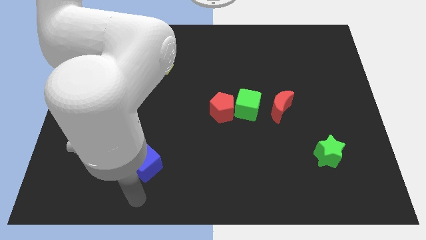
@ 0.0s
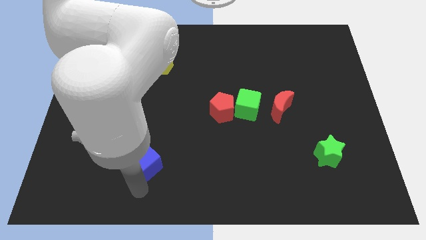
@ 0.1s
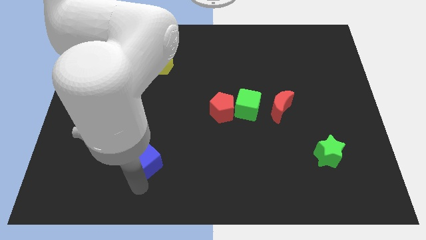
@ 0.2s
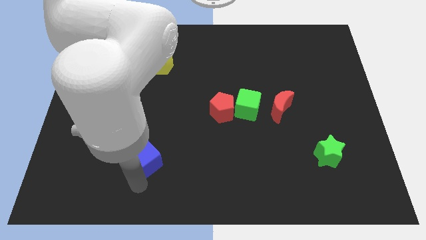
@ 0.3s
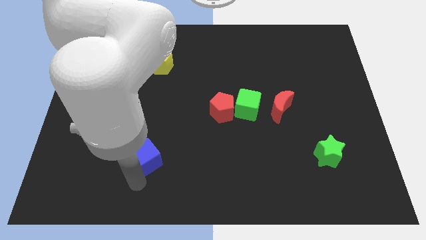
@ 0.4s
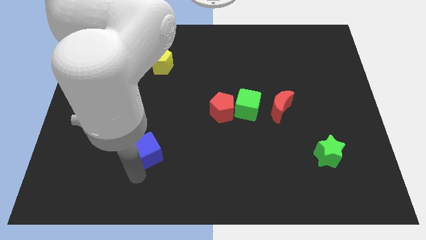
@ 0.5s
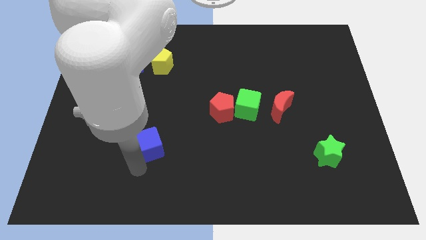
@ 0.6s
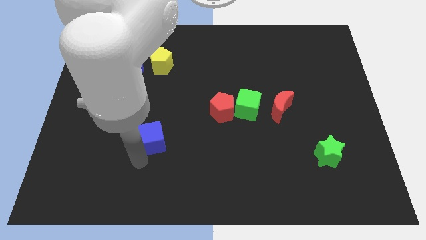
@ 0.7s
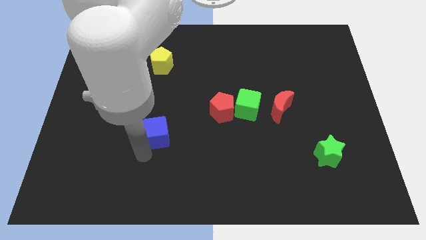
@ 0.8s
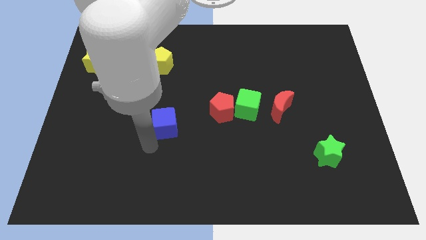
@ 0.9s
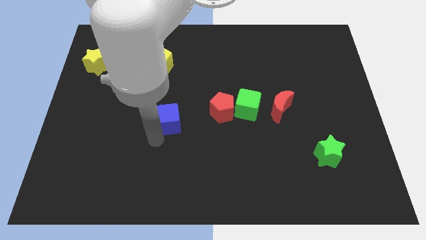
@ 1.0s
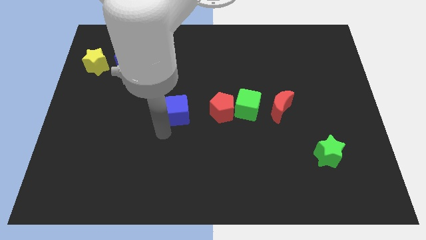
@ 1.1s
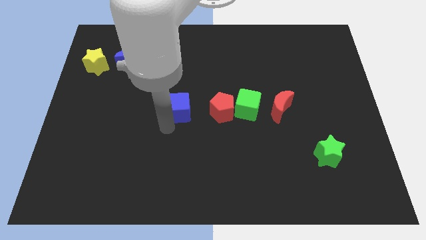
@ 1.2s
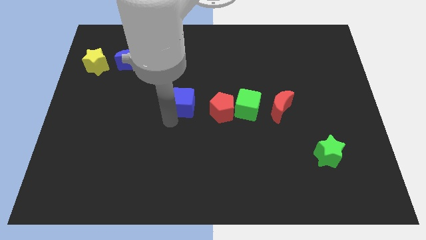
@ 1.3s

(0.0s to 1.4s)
place the blue cube to the left side of the red pentagon

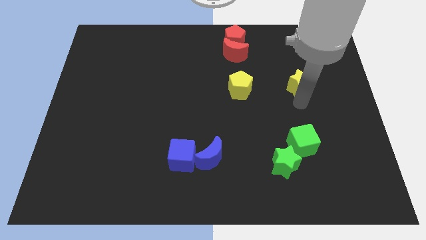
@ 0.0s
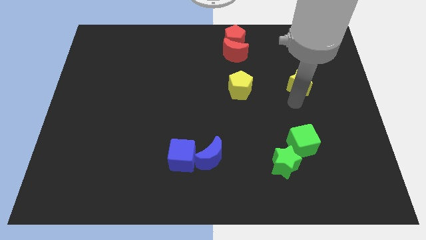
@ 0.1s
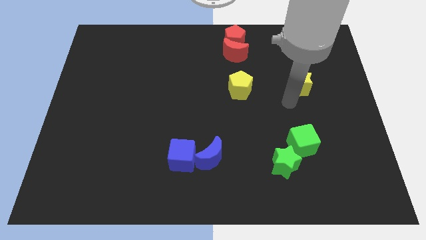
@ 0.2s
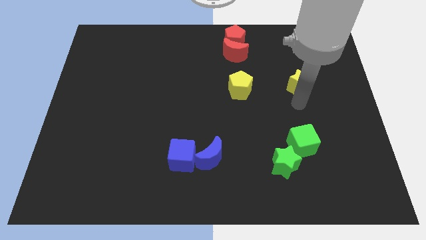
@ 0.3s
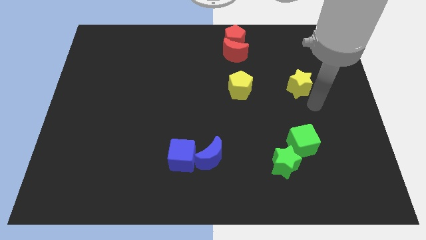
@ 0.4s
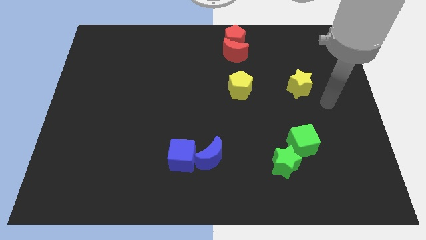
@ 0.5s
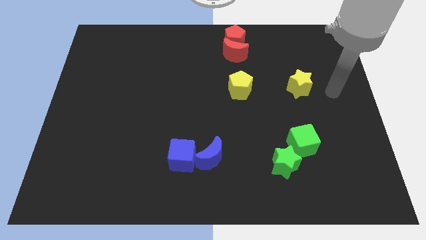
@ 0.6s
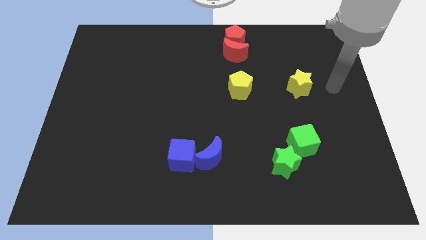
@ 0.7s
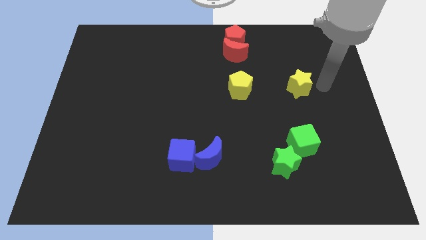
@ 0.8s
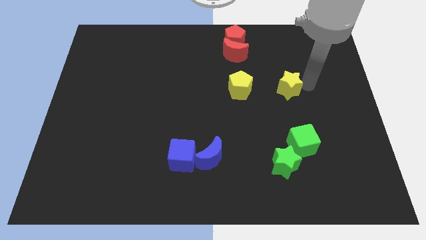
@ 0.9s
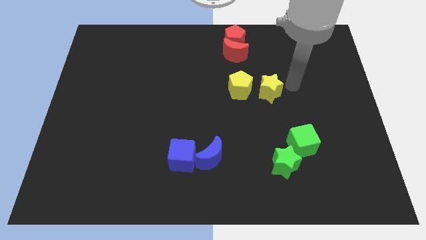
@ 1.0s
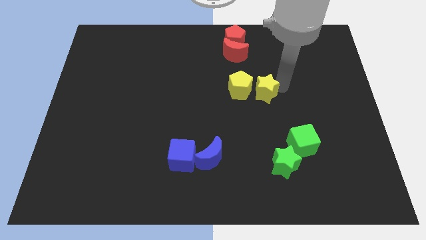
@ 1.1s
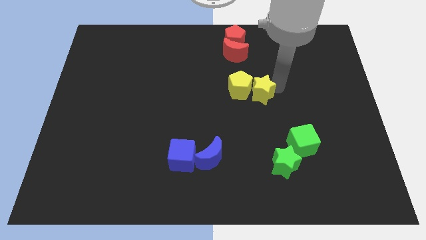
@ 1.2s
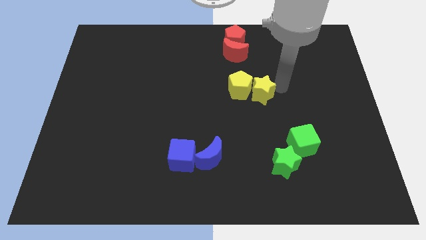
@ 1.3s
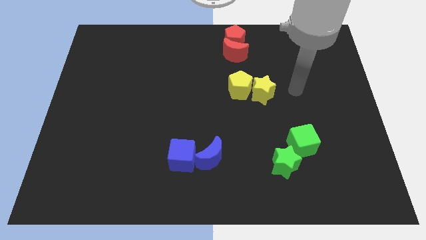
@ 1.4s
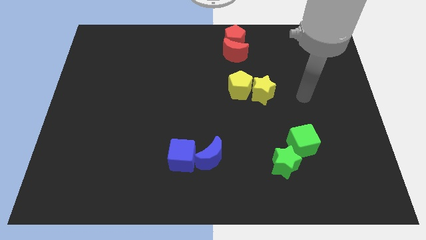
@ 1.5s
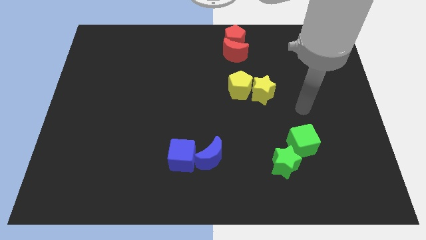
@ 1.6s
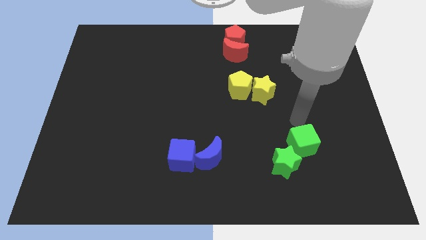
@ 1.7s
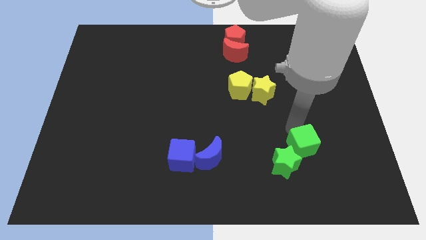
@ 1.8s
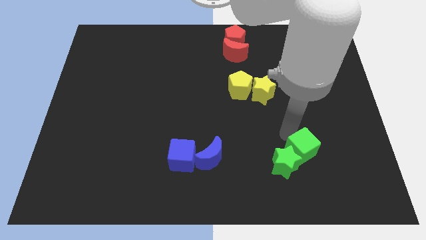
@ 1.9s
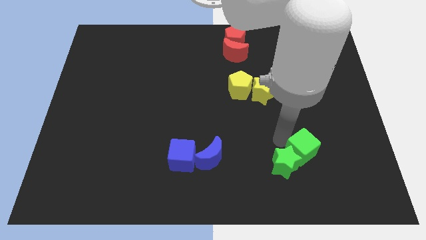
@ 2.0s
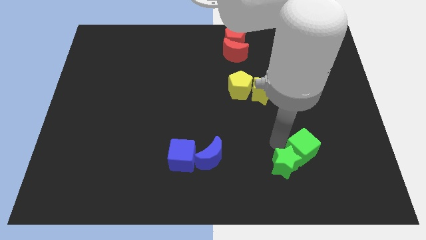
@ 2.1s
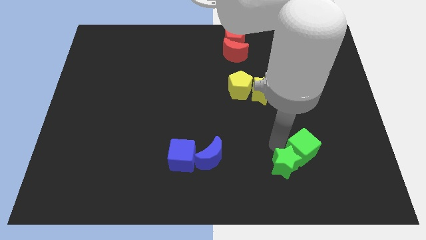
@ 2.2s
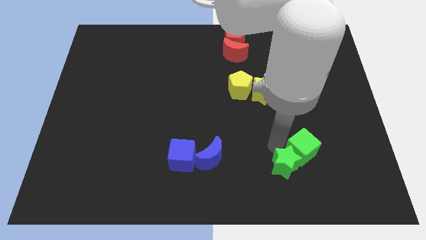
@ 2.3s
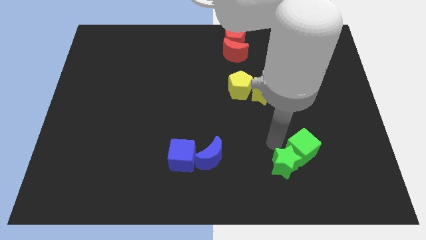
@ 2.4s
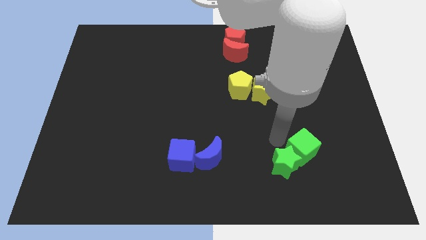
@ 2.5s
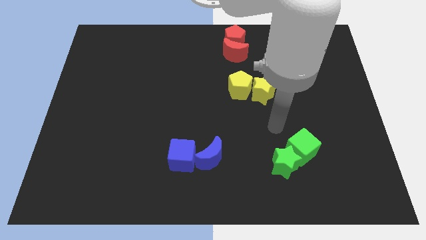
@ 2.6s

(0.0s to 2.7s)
slightly touch down the green cube

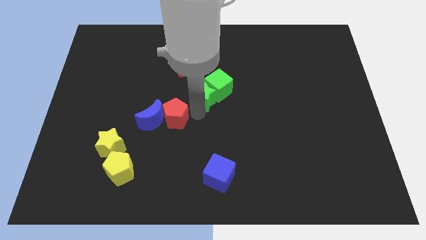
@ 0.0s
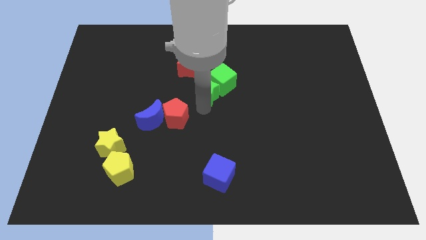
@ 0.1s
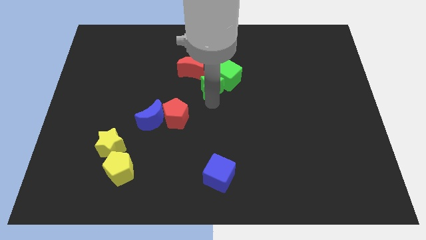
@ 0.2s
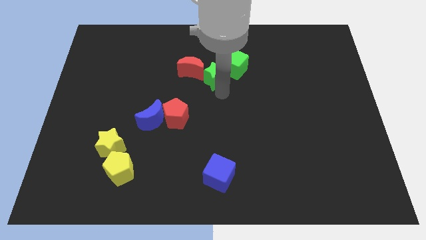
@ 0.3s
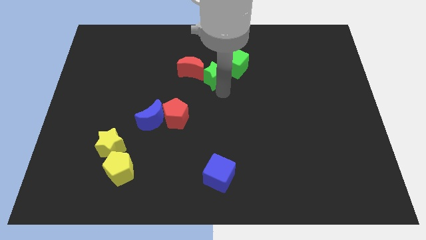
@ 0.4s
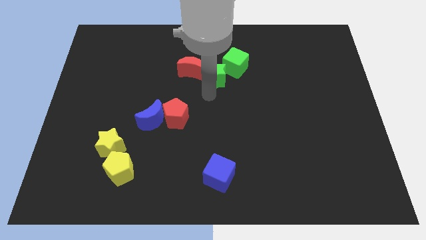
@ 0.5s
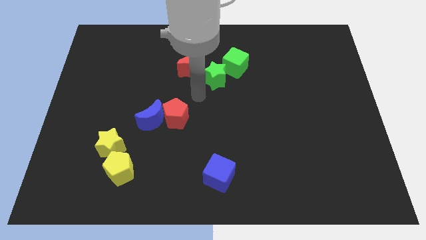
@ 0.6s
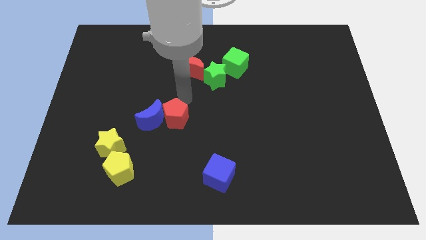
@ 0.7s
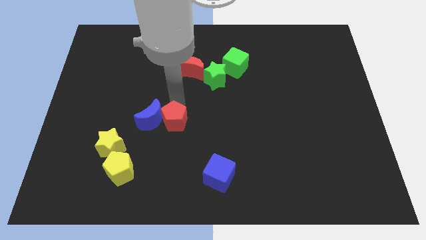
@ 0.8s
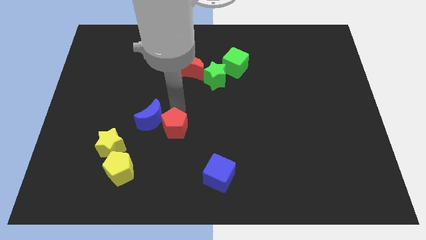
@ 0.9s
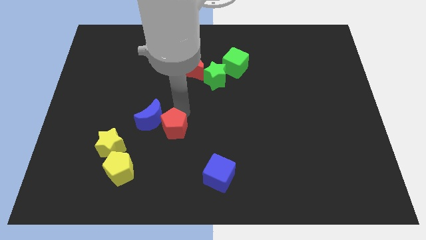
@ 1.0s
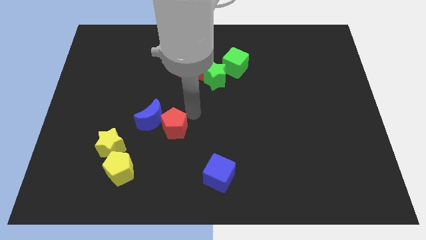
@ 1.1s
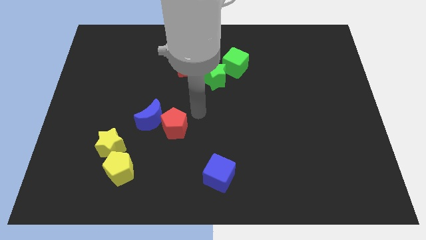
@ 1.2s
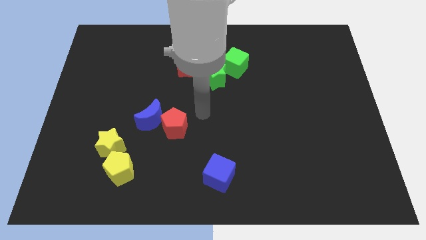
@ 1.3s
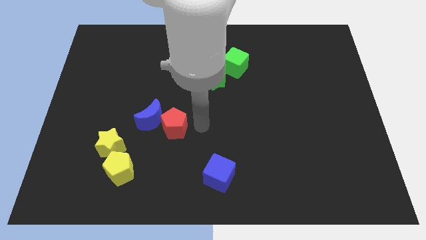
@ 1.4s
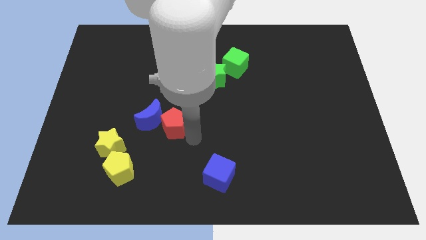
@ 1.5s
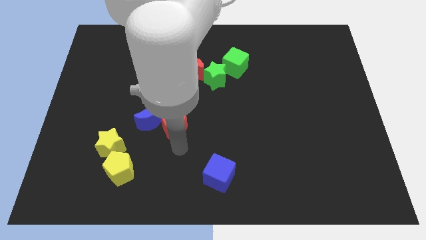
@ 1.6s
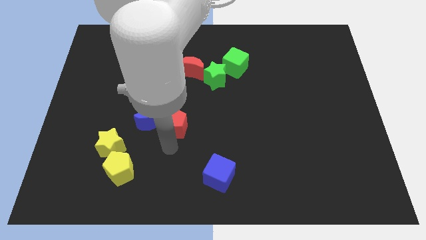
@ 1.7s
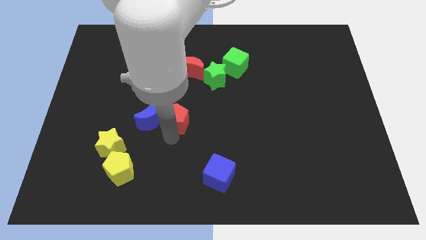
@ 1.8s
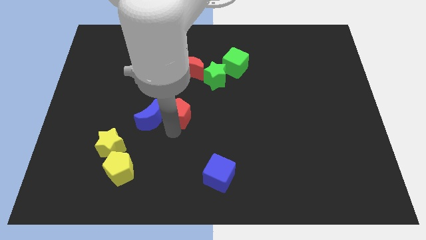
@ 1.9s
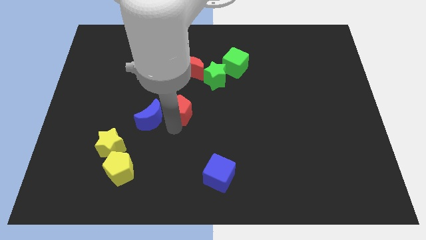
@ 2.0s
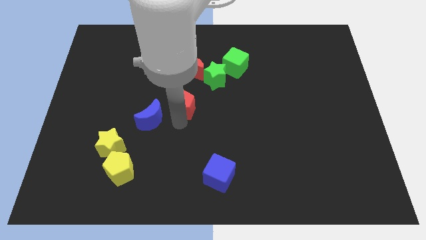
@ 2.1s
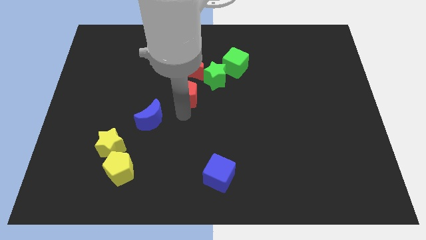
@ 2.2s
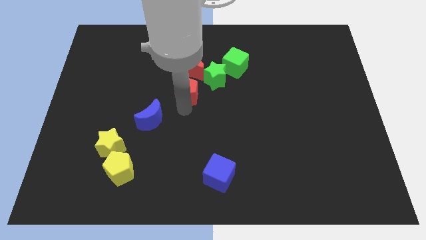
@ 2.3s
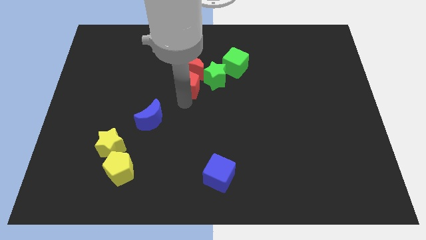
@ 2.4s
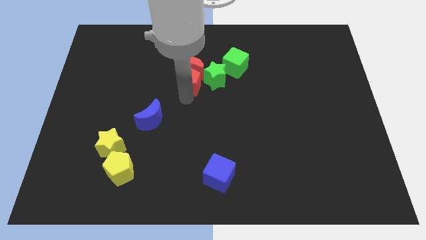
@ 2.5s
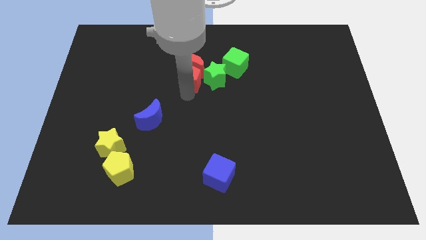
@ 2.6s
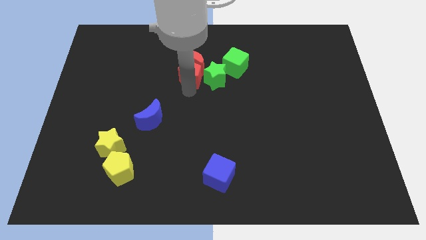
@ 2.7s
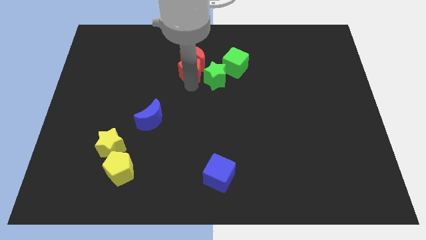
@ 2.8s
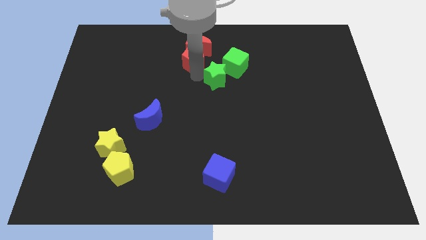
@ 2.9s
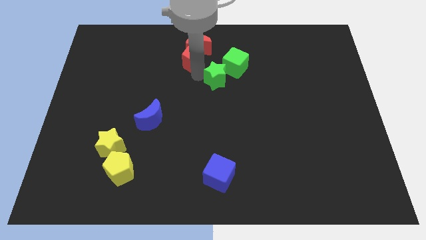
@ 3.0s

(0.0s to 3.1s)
push red crescent and red pentagon towards the top center

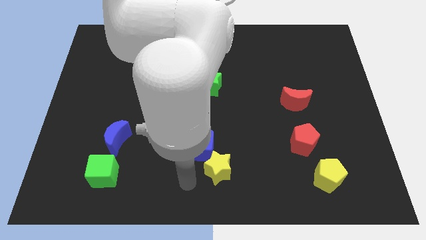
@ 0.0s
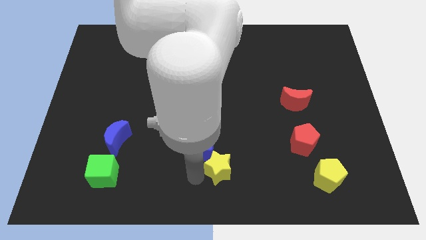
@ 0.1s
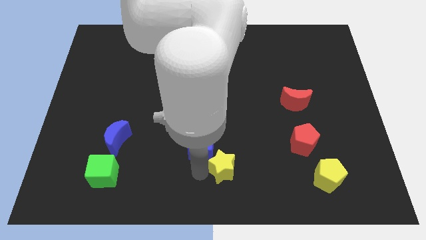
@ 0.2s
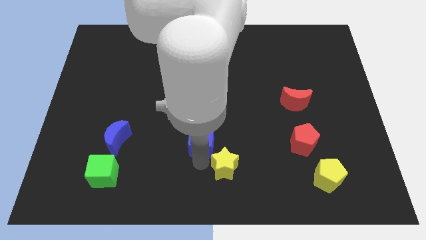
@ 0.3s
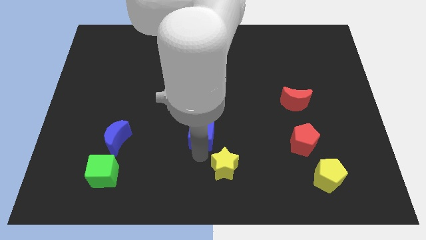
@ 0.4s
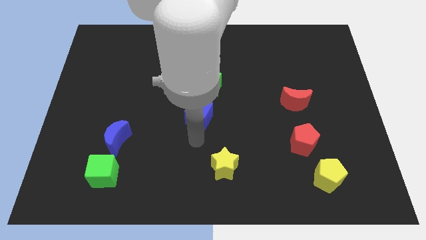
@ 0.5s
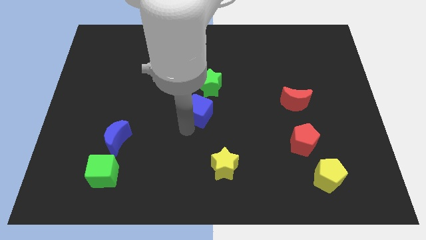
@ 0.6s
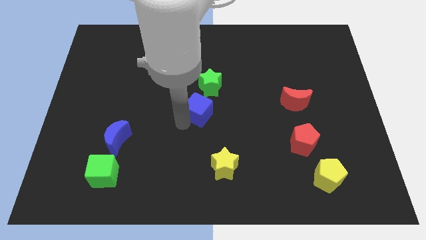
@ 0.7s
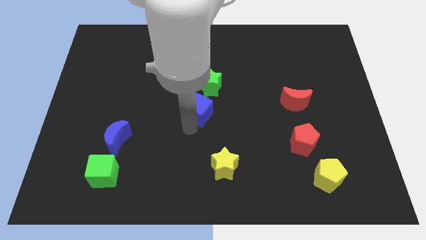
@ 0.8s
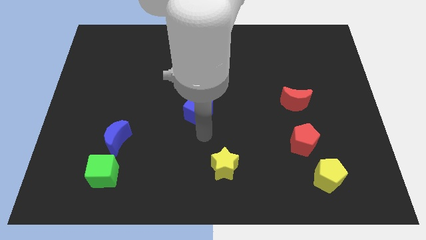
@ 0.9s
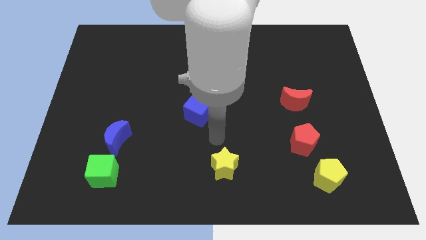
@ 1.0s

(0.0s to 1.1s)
separate blue cube from yellow star

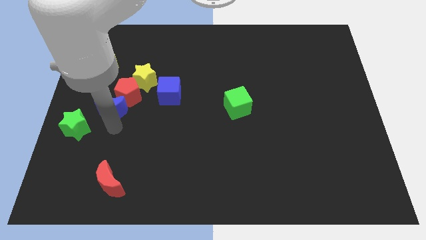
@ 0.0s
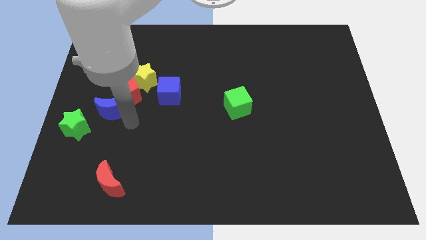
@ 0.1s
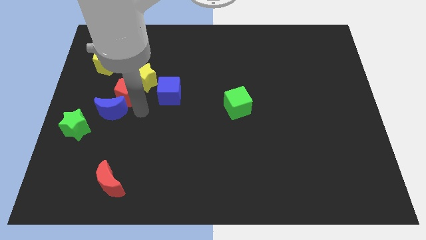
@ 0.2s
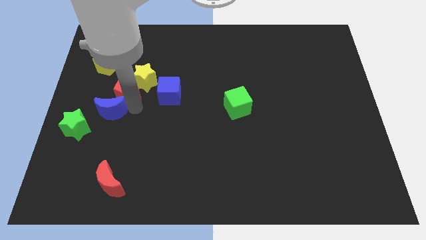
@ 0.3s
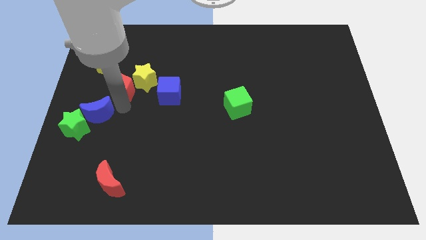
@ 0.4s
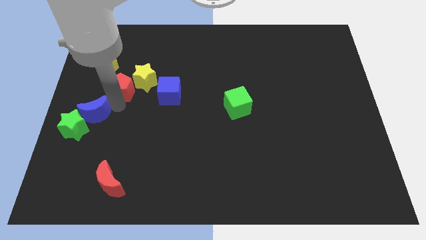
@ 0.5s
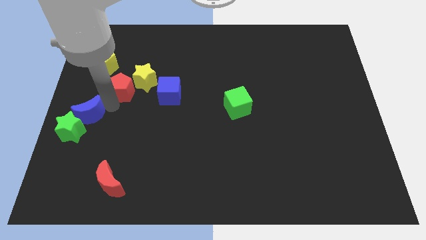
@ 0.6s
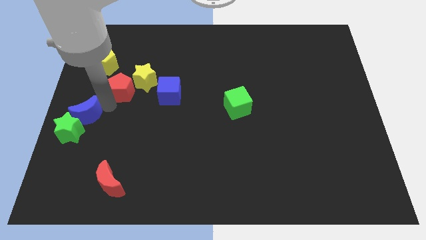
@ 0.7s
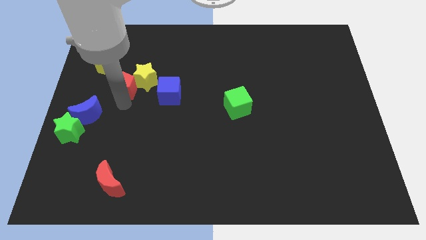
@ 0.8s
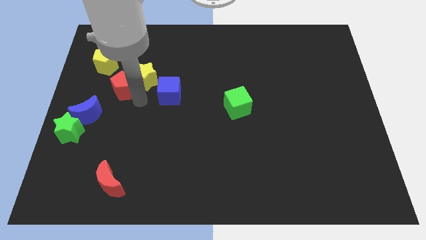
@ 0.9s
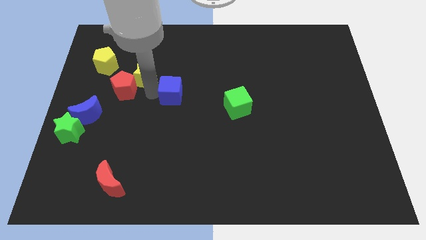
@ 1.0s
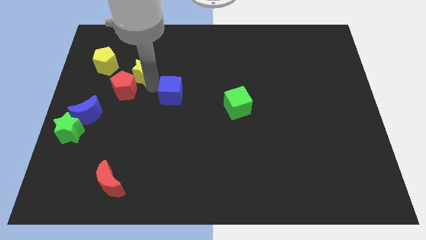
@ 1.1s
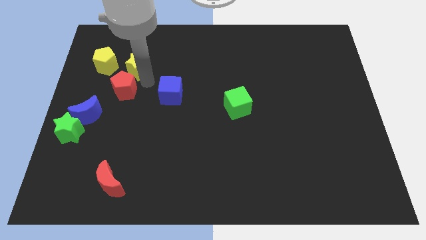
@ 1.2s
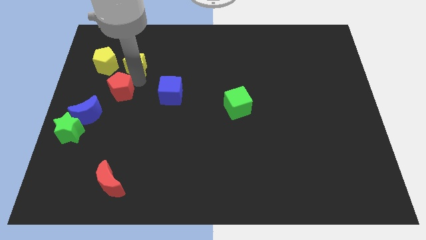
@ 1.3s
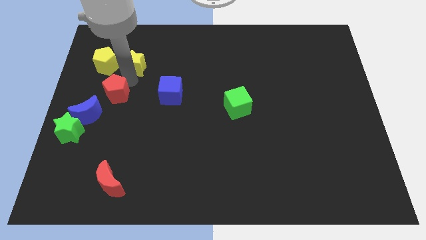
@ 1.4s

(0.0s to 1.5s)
separate the blue crescent from the group of blocks
